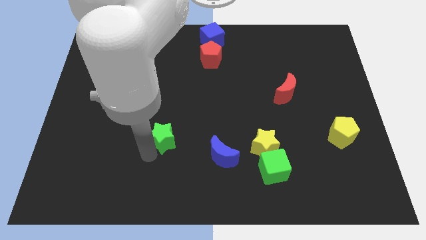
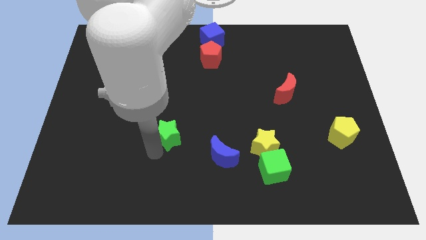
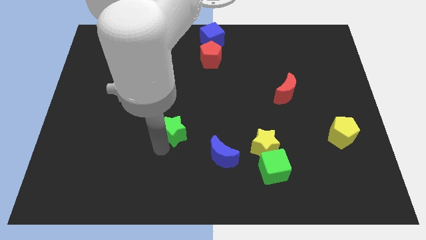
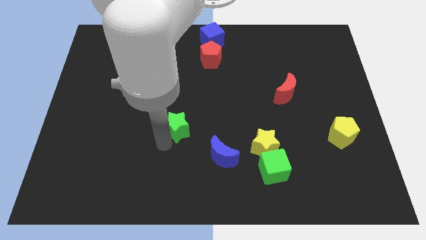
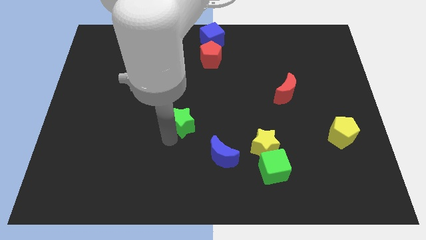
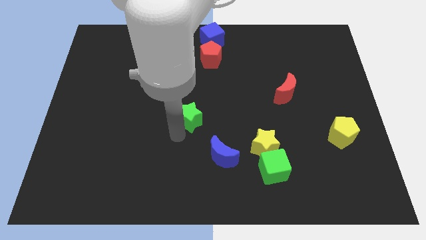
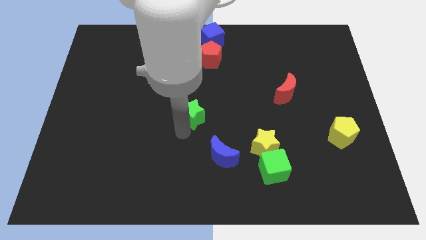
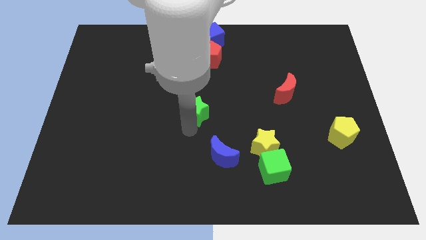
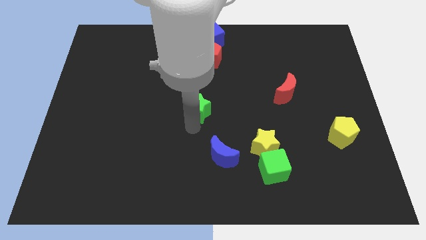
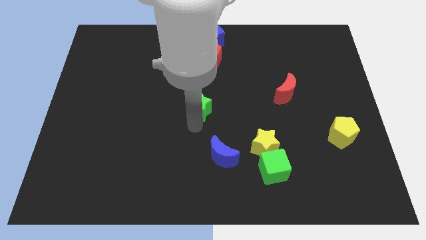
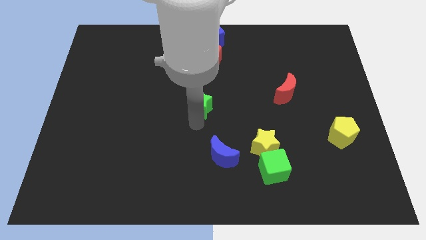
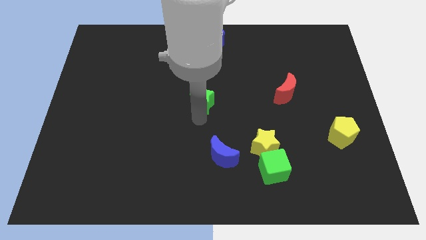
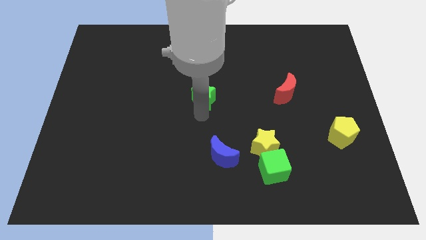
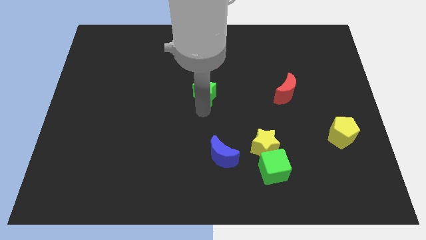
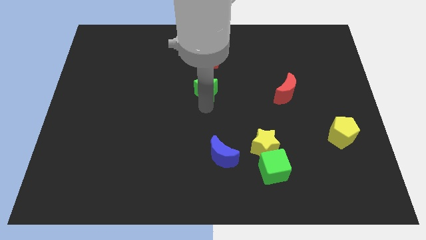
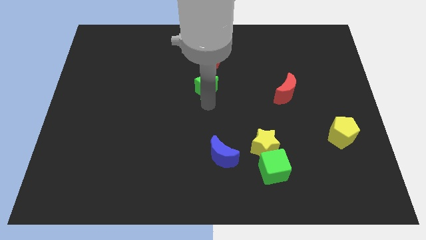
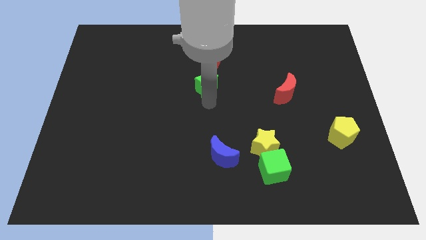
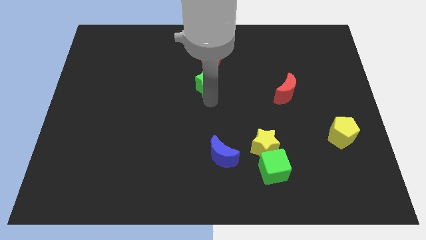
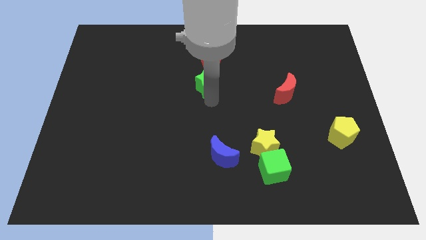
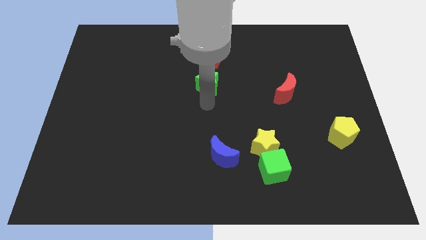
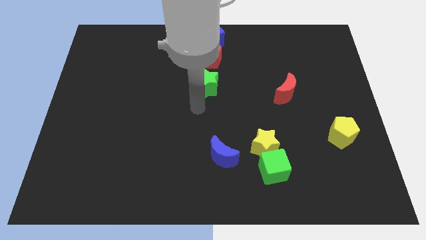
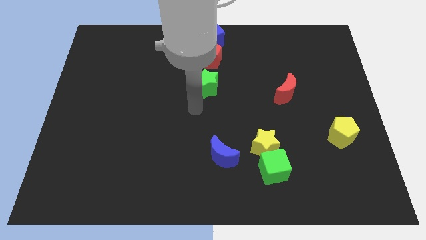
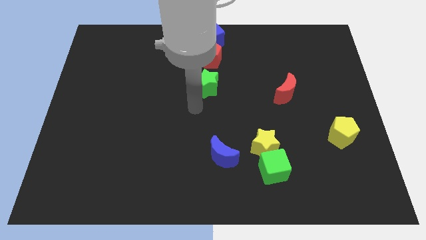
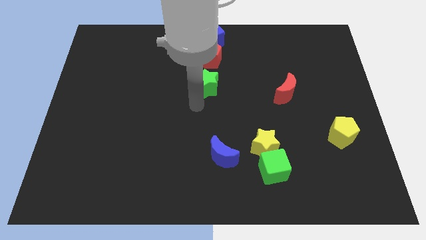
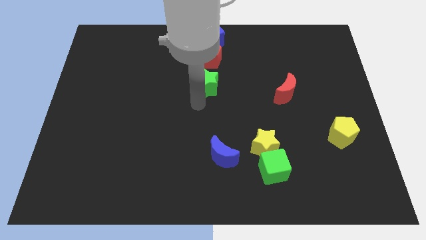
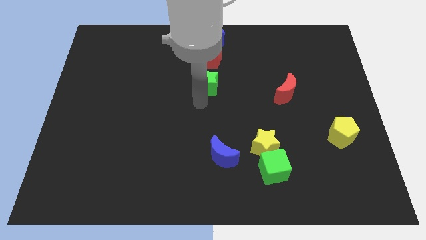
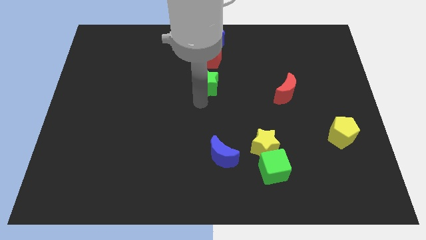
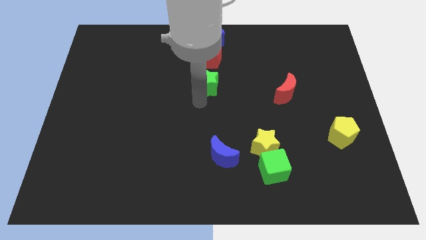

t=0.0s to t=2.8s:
move the green star close to the red pentagon

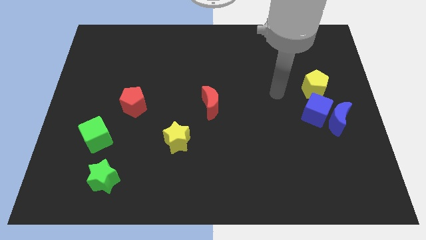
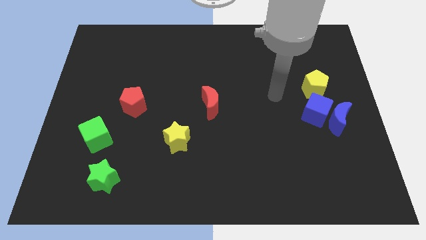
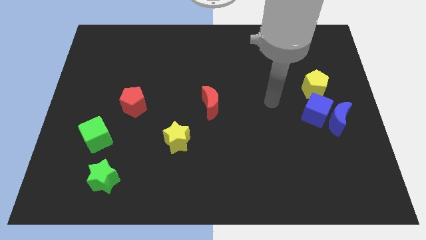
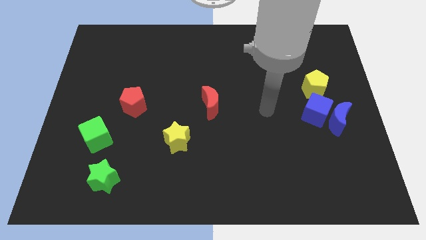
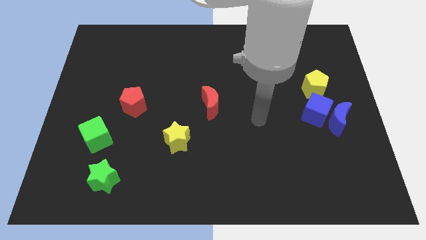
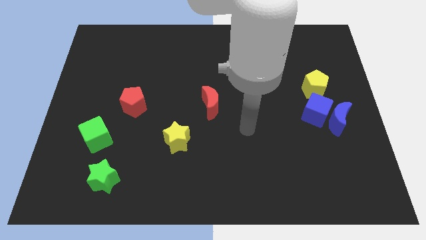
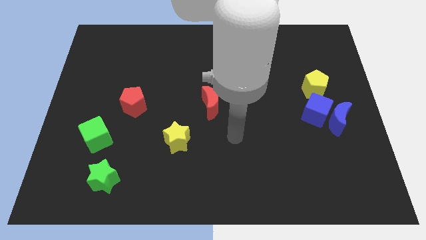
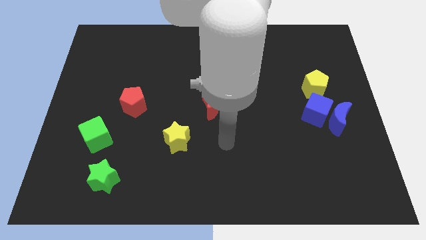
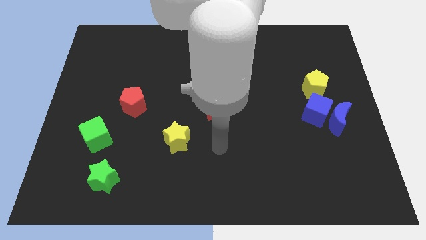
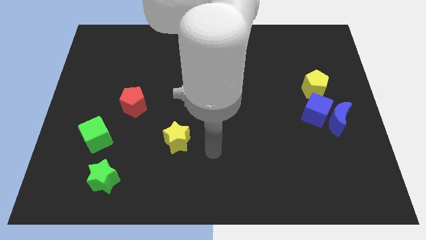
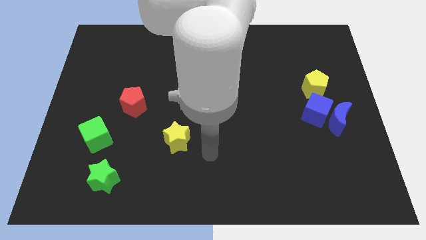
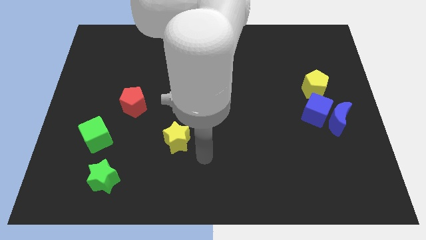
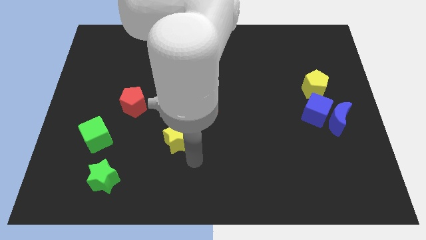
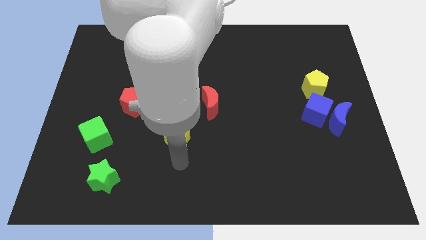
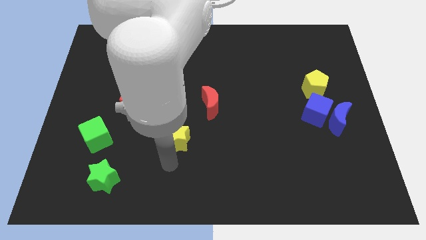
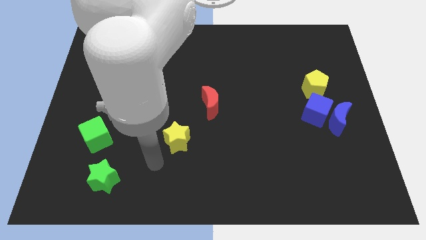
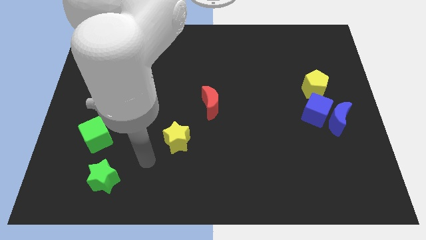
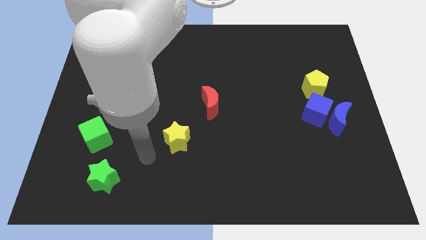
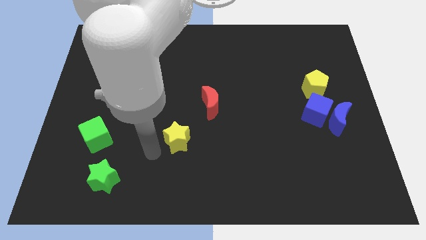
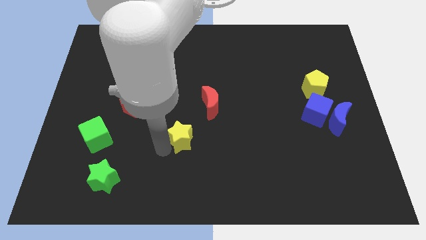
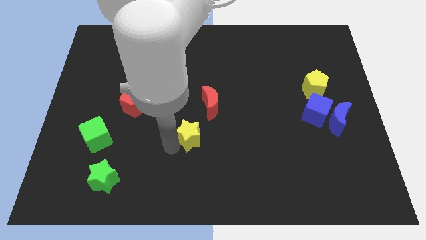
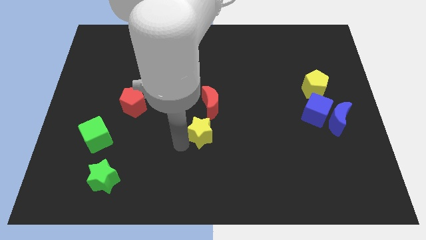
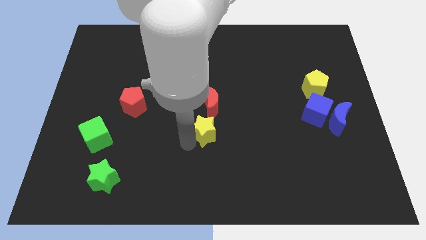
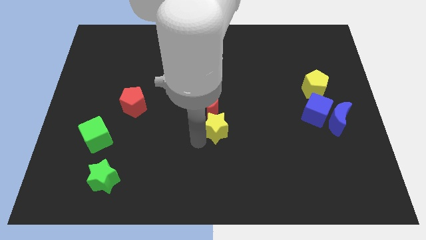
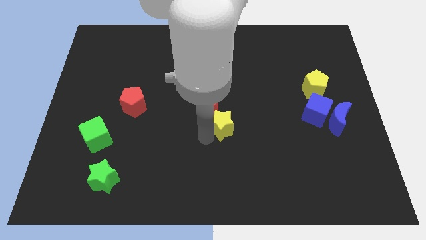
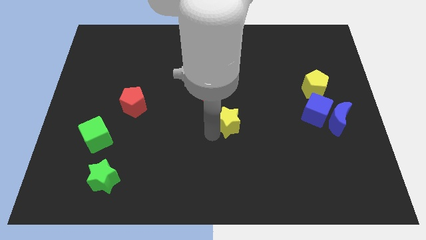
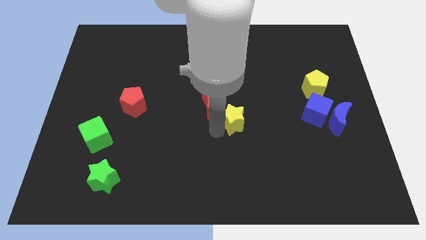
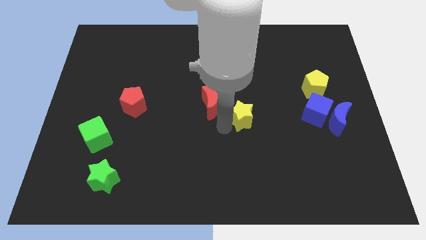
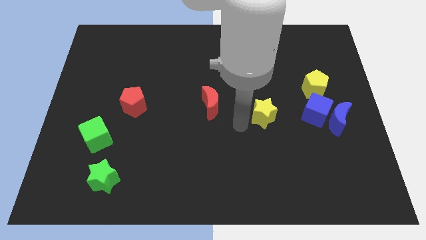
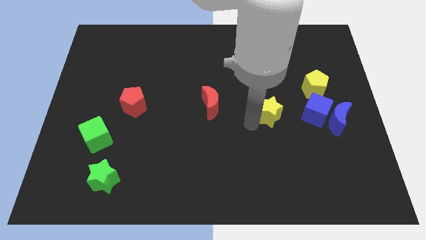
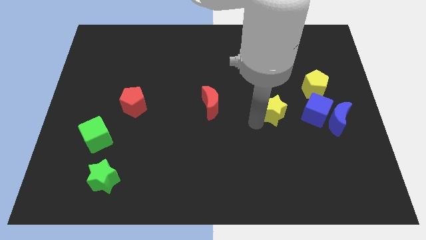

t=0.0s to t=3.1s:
slide the yellow star towards the right side of the board

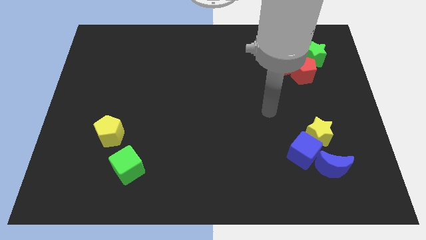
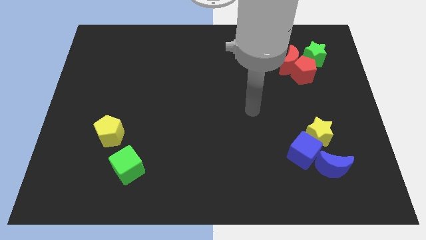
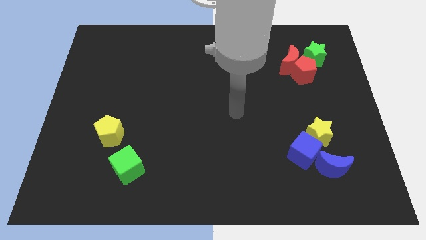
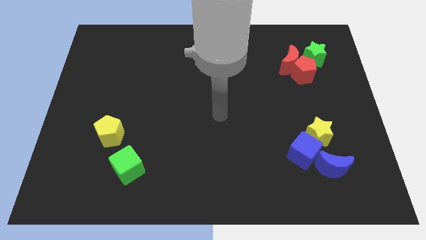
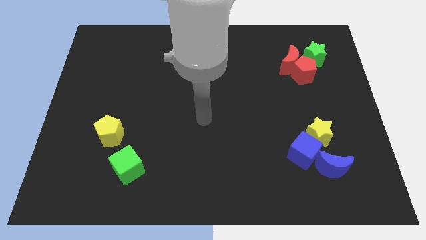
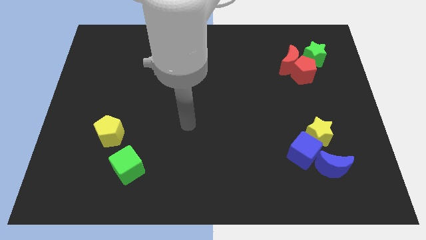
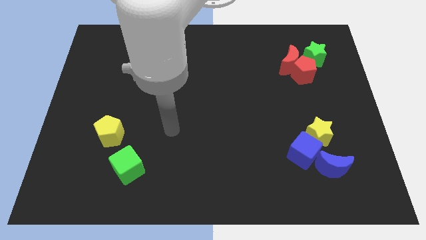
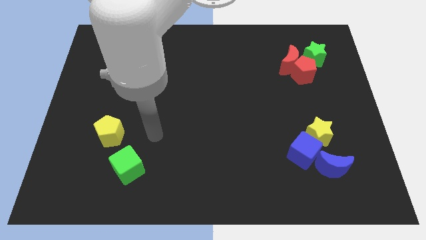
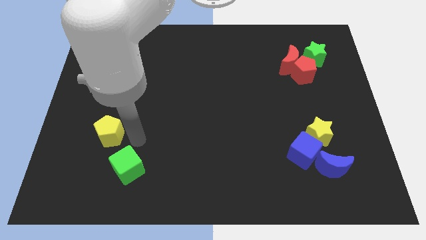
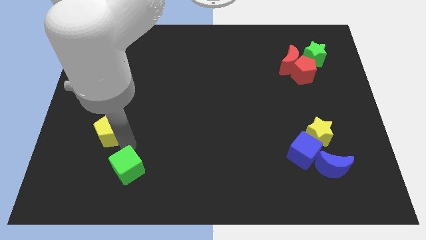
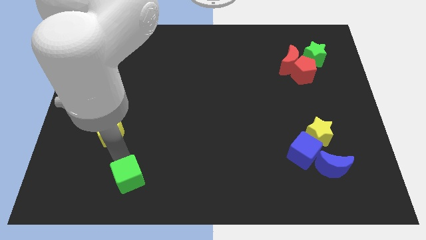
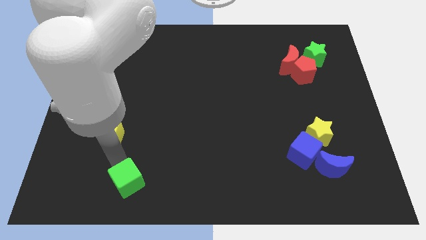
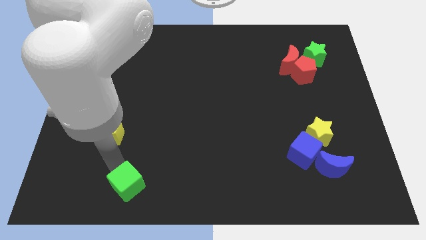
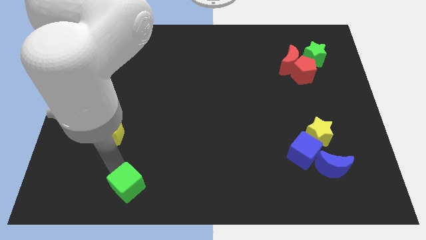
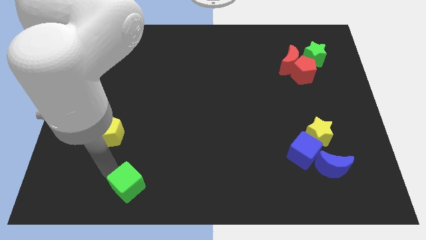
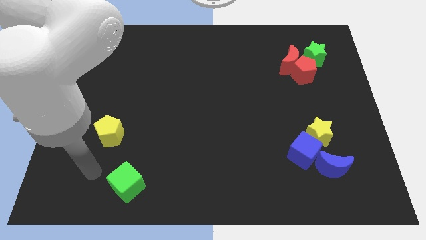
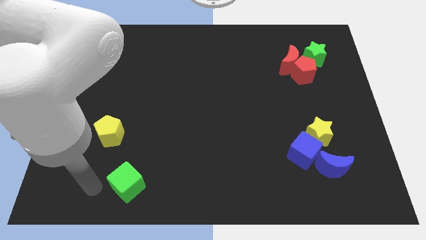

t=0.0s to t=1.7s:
move the green cube slightly to the bottom center of the board

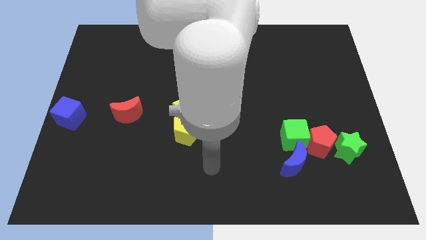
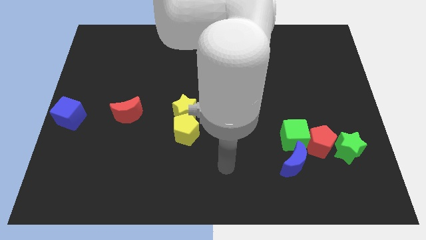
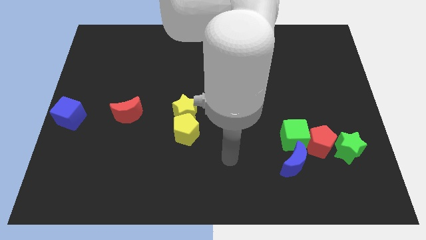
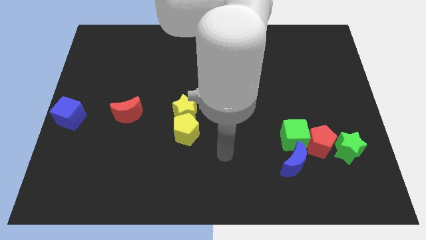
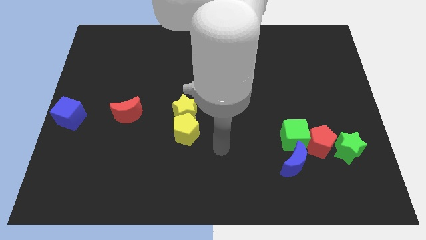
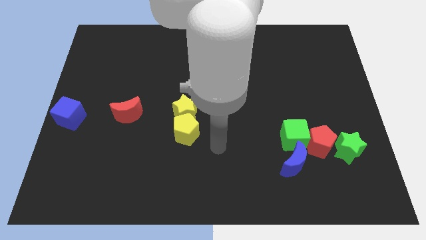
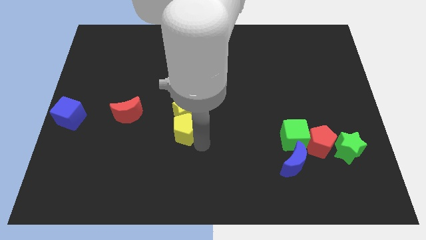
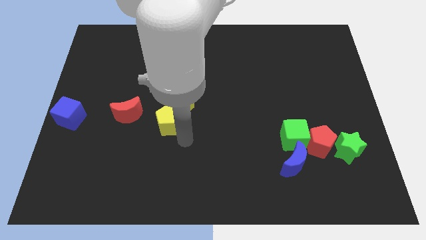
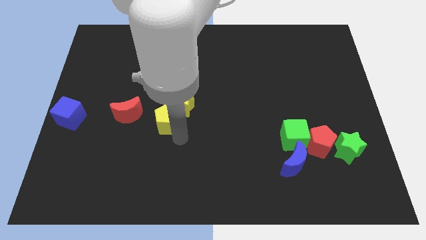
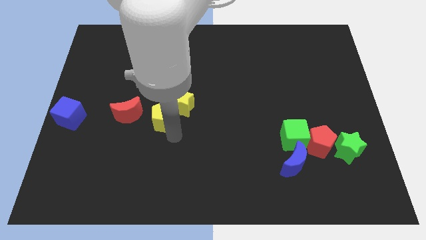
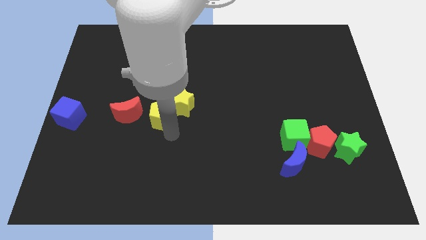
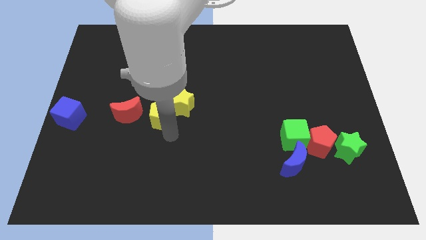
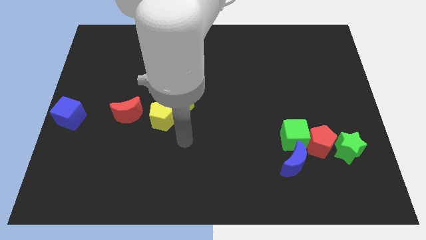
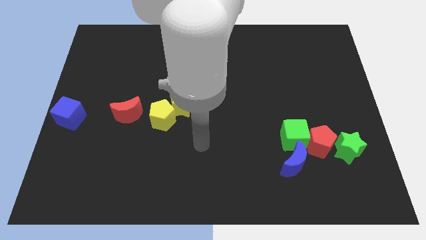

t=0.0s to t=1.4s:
push the red pentagon to the bottom left side of the yellow star

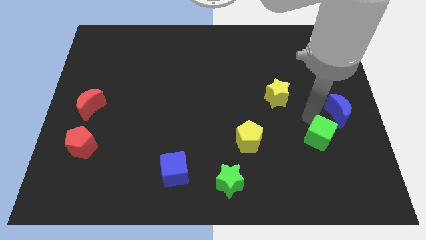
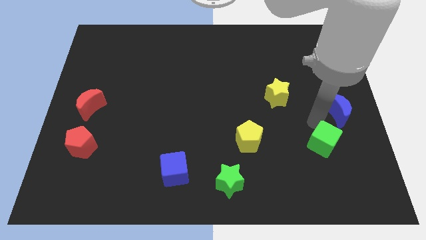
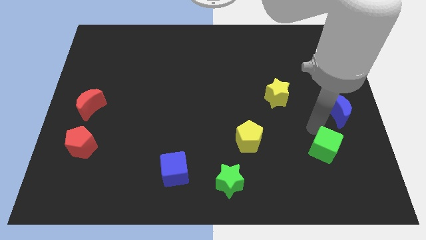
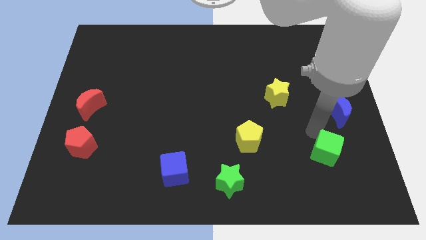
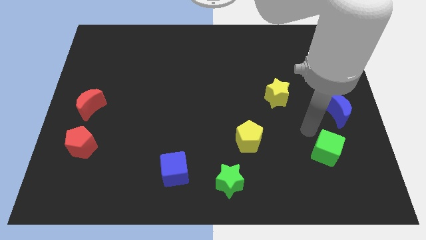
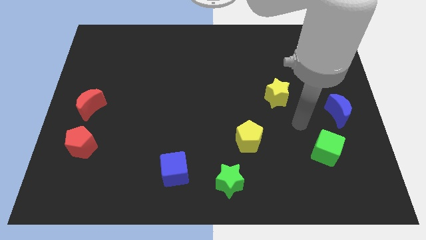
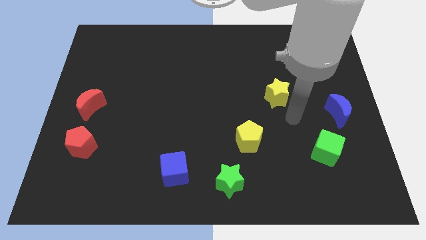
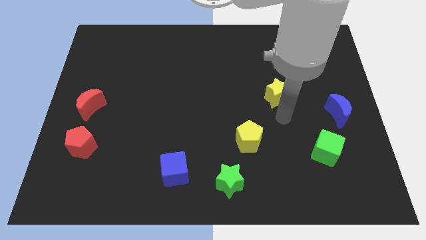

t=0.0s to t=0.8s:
push green cube towards bottom
